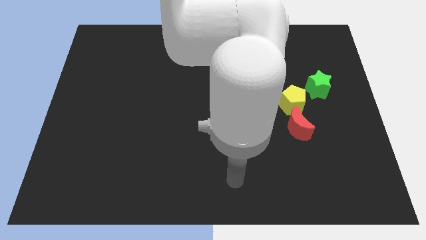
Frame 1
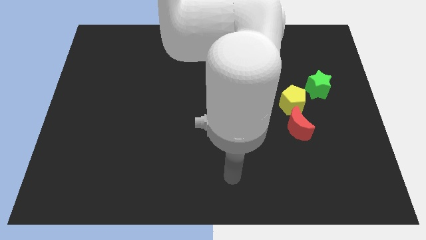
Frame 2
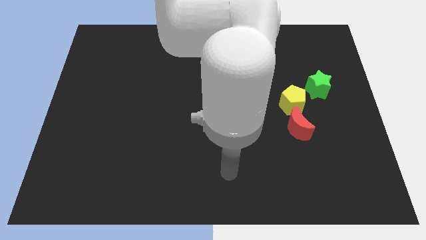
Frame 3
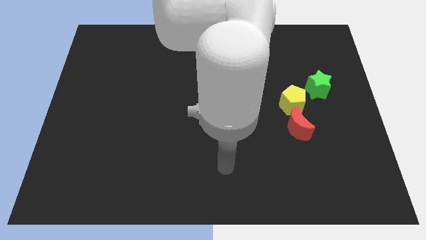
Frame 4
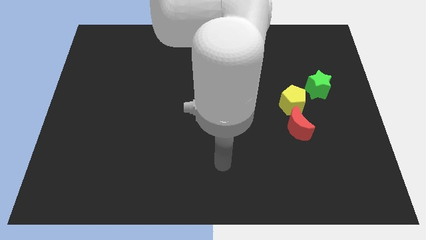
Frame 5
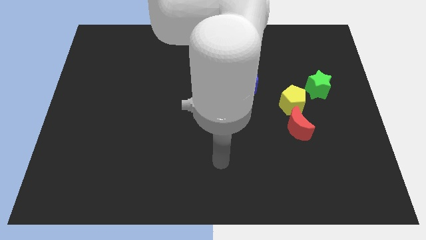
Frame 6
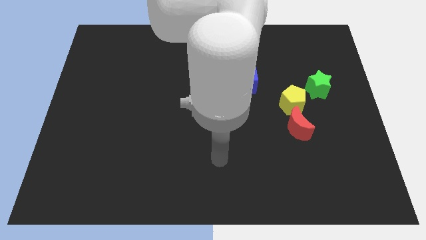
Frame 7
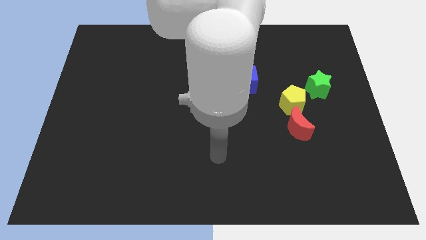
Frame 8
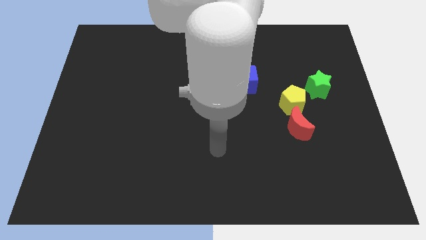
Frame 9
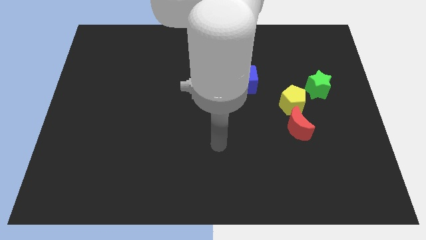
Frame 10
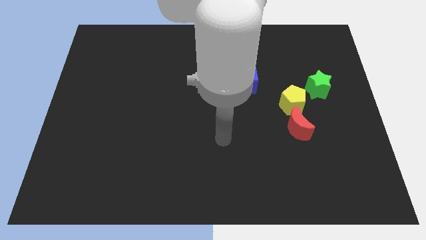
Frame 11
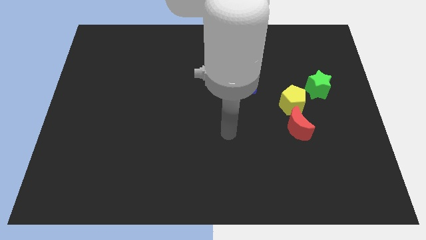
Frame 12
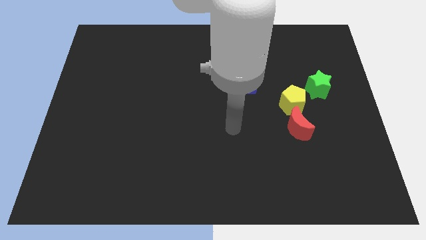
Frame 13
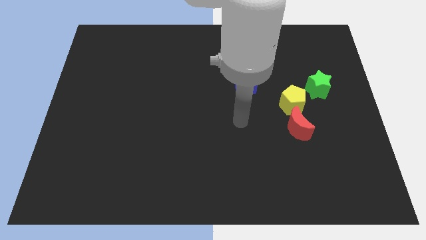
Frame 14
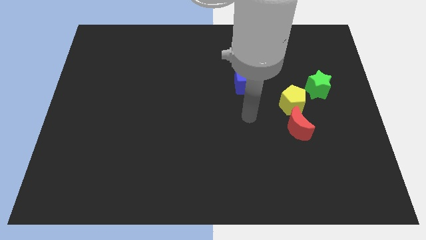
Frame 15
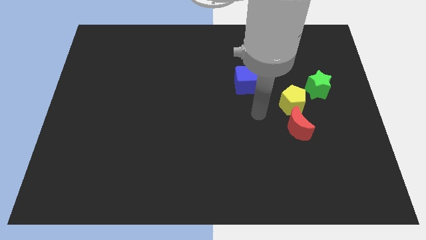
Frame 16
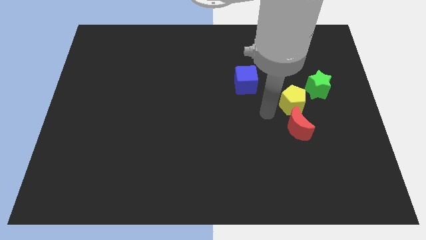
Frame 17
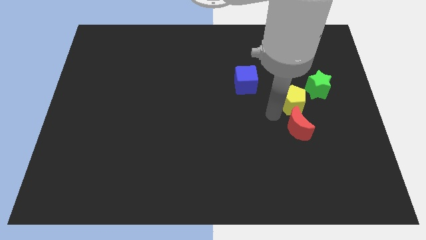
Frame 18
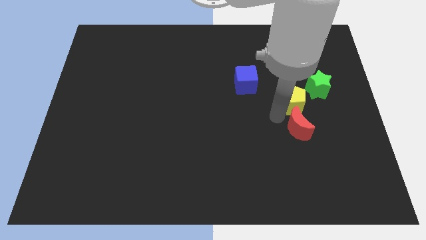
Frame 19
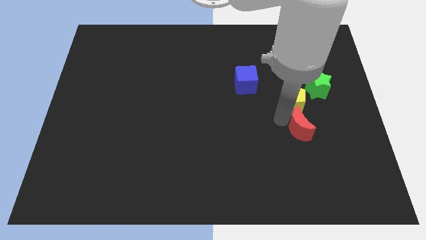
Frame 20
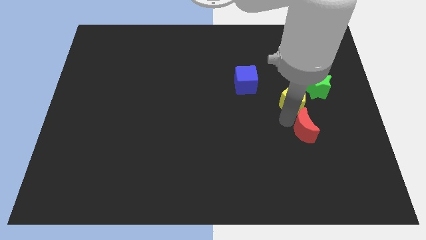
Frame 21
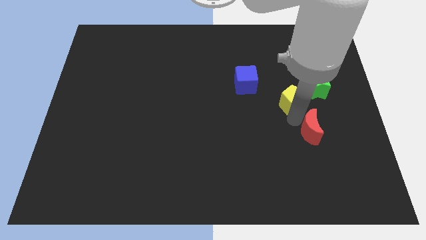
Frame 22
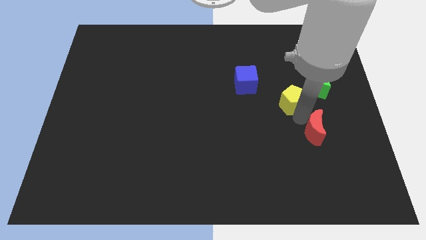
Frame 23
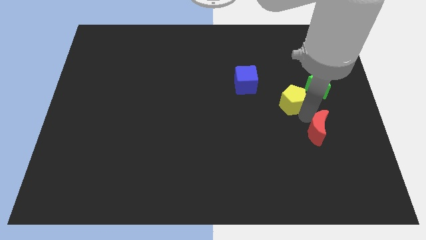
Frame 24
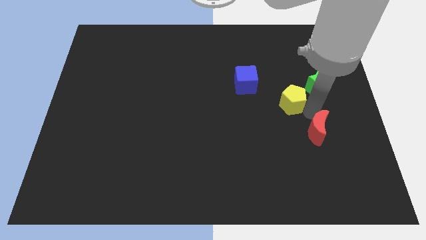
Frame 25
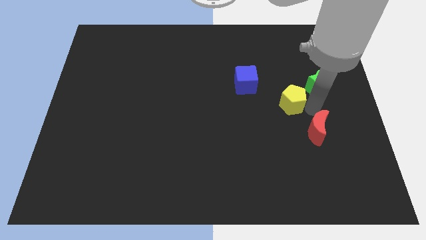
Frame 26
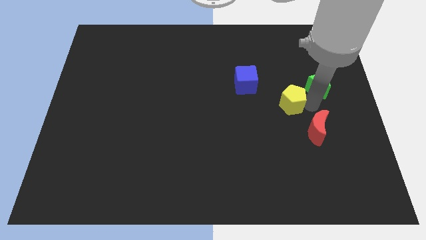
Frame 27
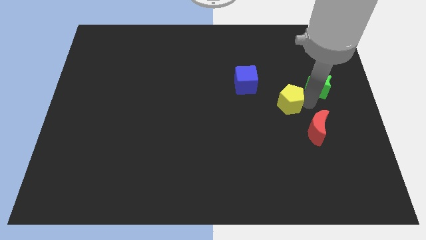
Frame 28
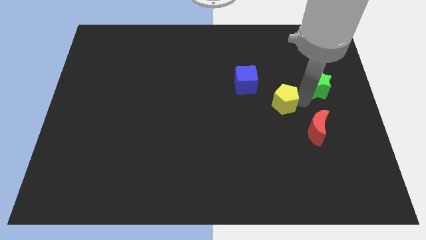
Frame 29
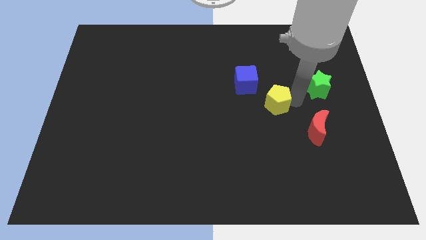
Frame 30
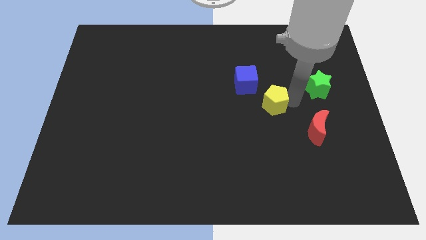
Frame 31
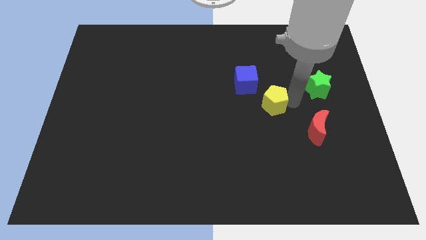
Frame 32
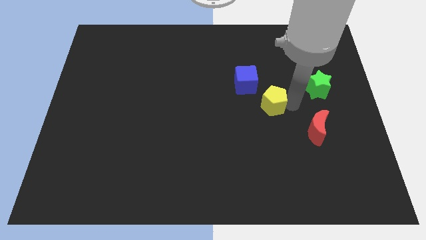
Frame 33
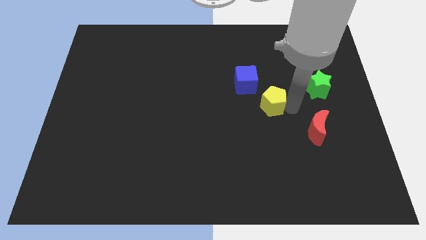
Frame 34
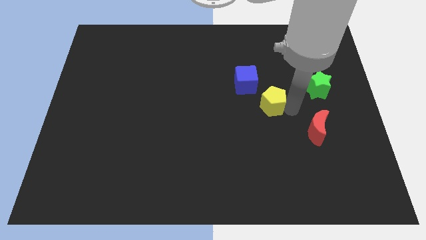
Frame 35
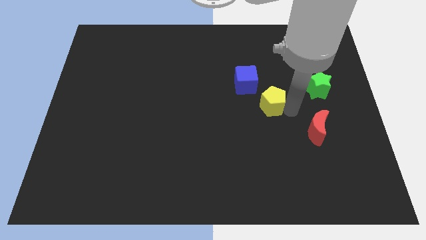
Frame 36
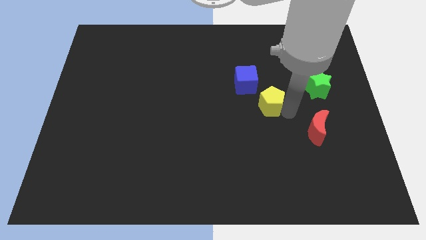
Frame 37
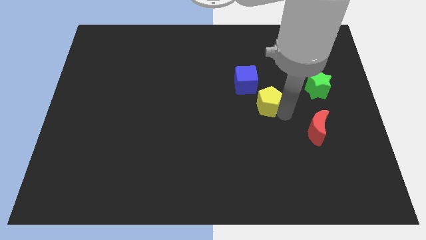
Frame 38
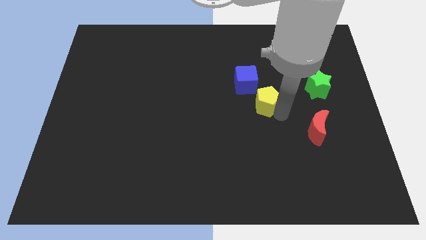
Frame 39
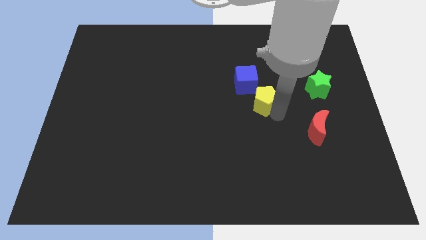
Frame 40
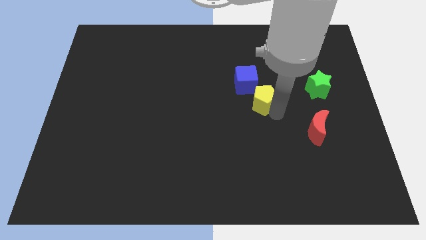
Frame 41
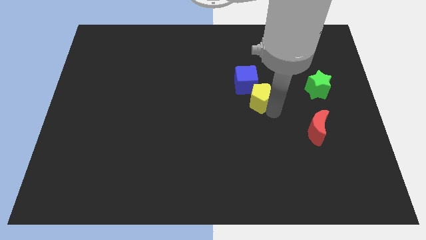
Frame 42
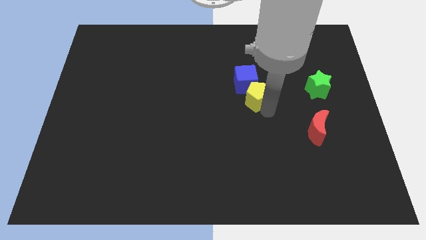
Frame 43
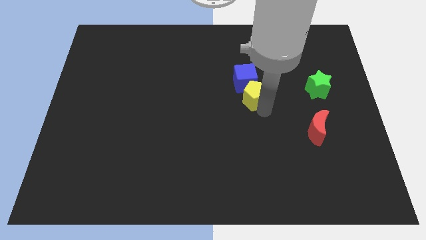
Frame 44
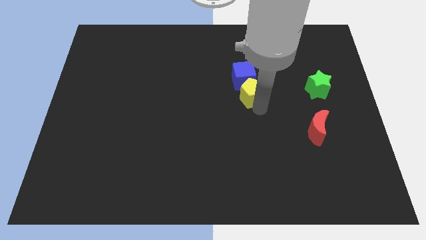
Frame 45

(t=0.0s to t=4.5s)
put the yellow pentagon close to the blue cube

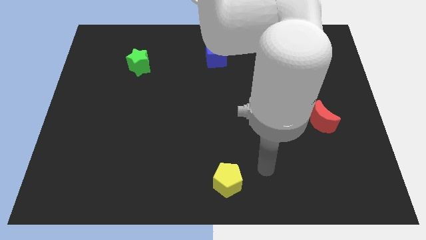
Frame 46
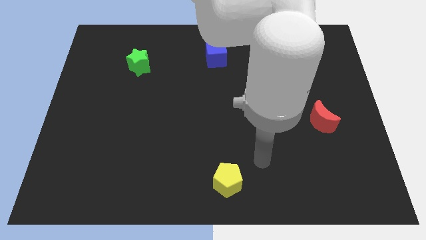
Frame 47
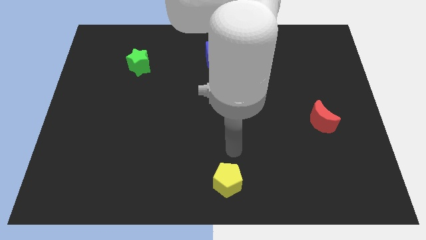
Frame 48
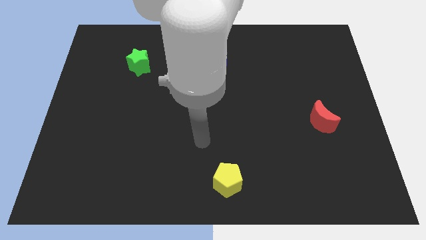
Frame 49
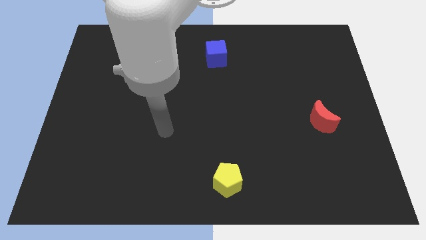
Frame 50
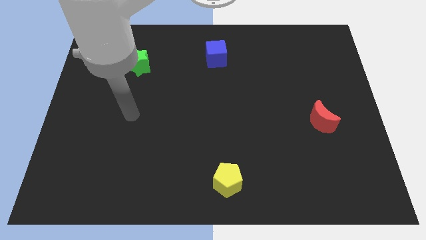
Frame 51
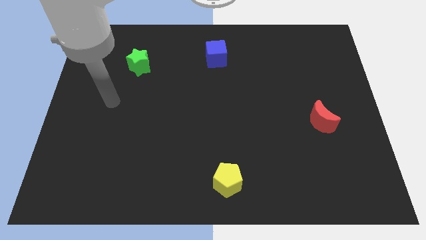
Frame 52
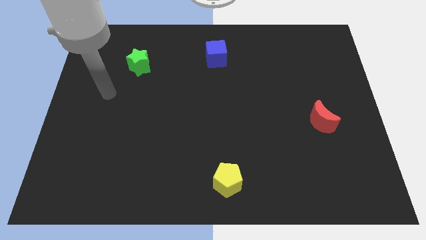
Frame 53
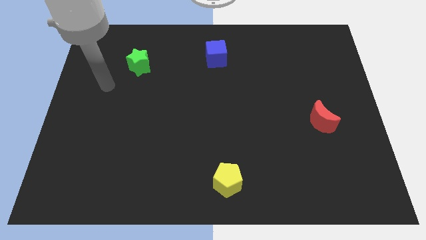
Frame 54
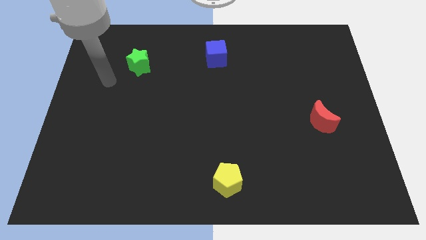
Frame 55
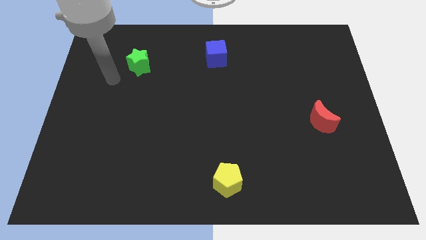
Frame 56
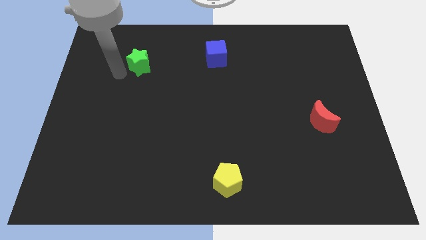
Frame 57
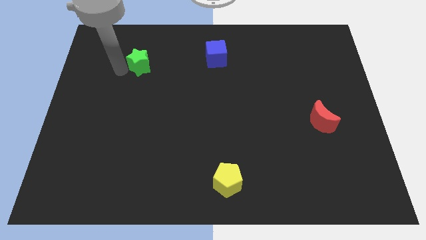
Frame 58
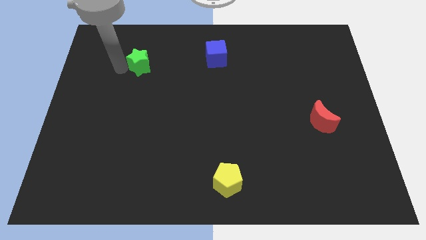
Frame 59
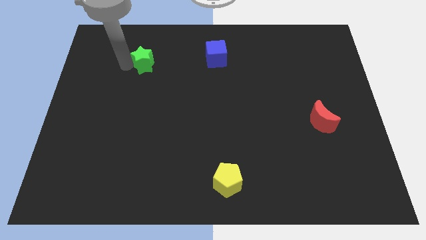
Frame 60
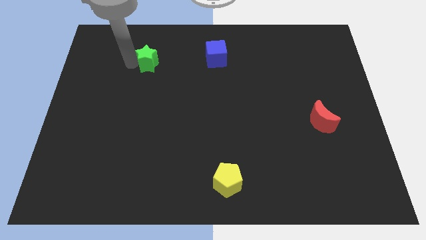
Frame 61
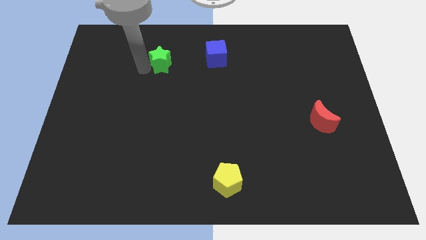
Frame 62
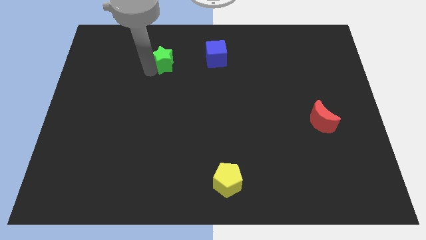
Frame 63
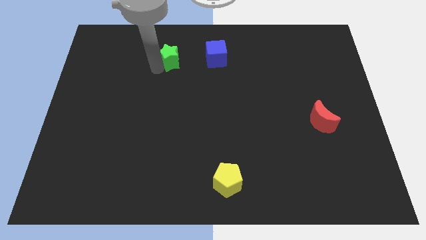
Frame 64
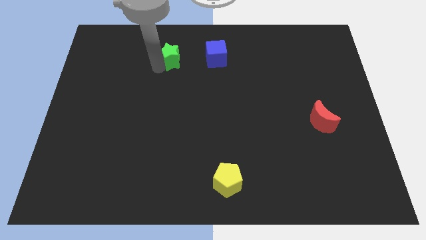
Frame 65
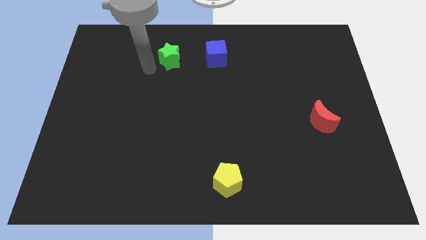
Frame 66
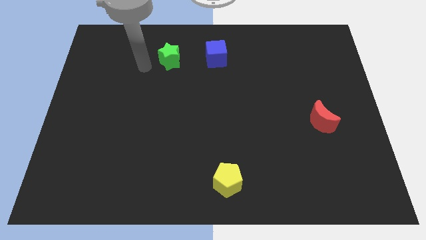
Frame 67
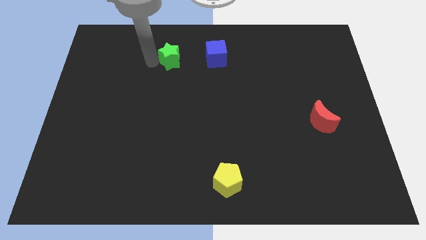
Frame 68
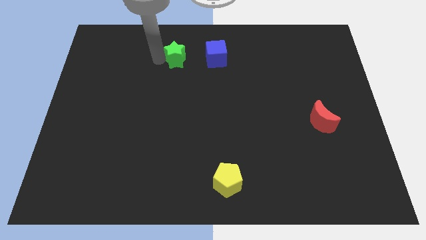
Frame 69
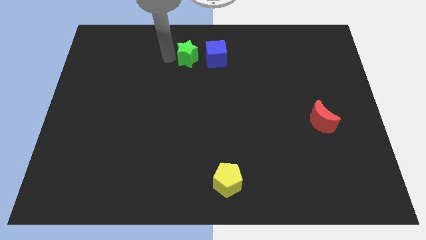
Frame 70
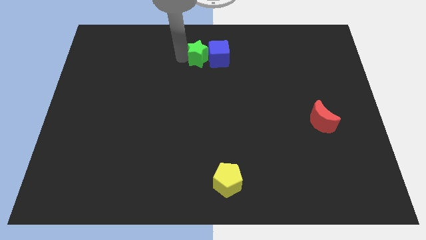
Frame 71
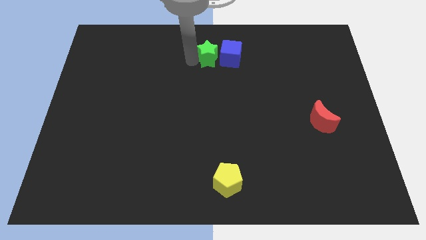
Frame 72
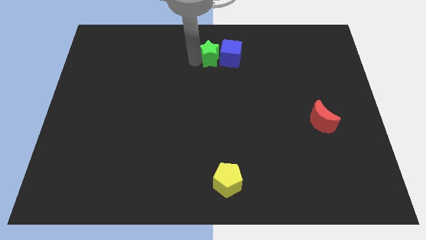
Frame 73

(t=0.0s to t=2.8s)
slide the green star next to the blue cube

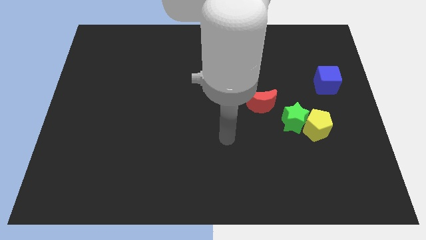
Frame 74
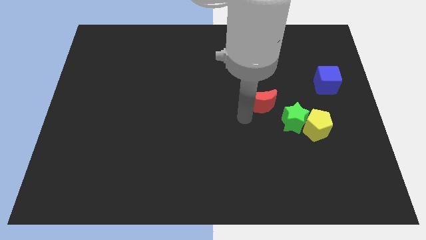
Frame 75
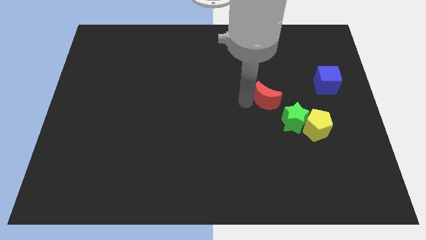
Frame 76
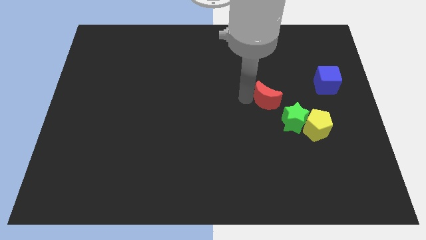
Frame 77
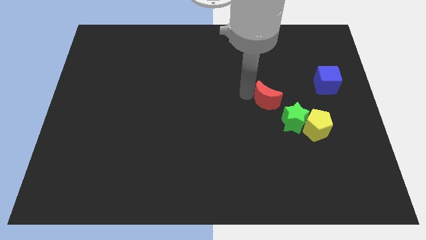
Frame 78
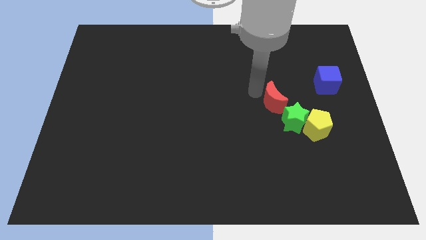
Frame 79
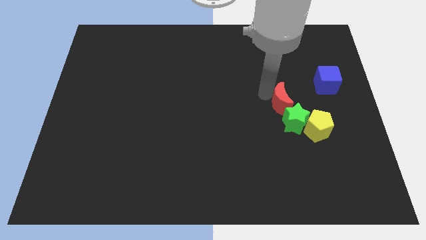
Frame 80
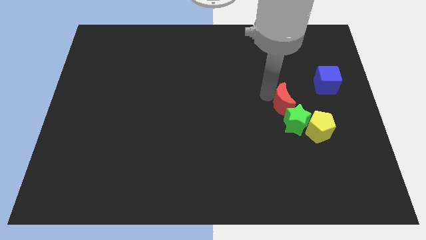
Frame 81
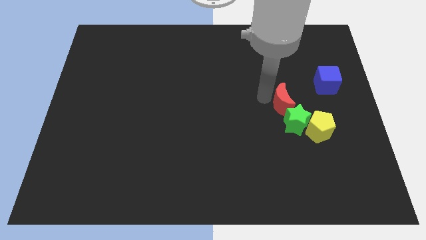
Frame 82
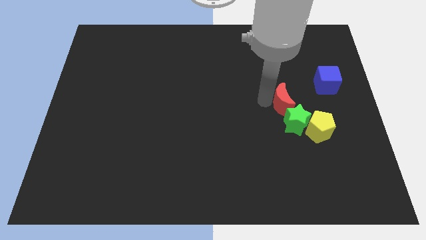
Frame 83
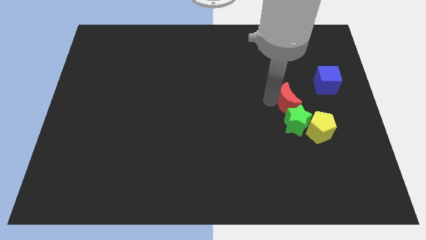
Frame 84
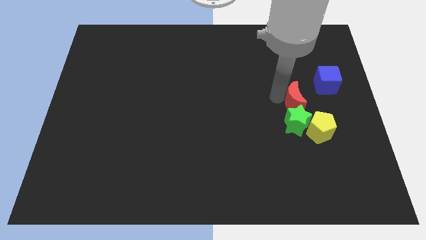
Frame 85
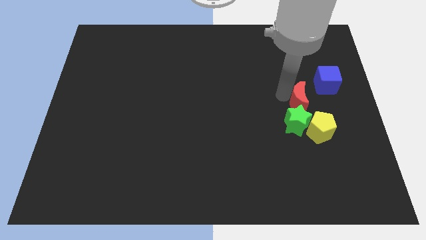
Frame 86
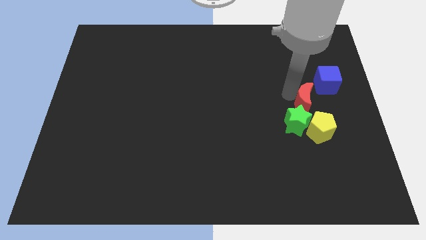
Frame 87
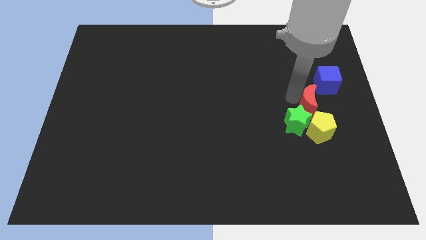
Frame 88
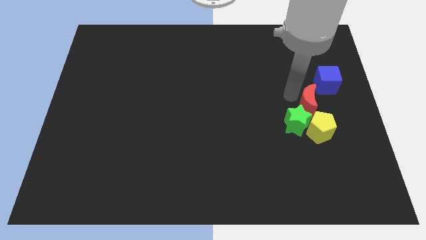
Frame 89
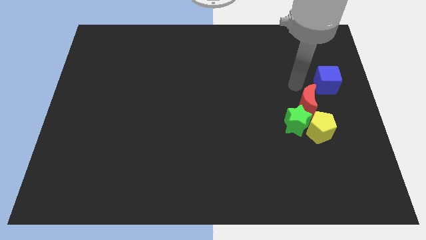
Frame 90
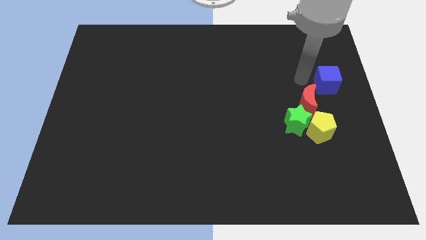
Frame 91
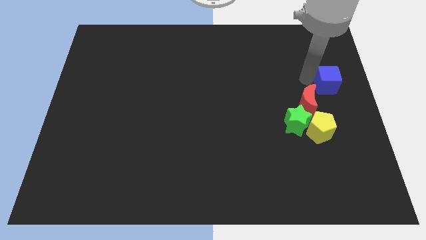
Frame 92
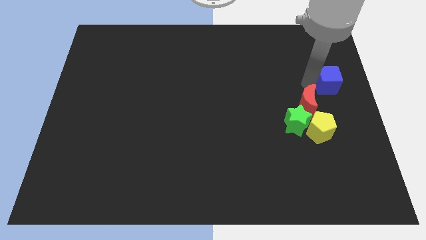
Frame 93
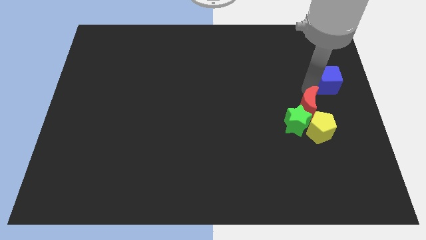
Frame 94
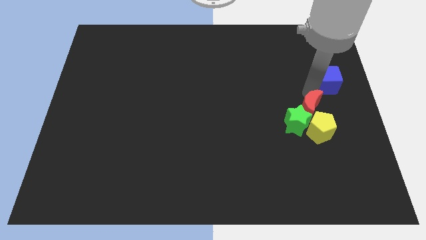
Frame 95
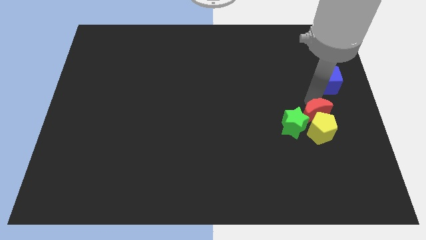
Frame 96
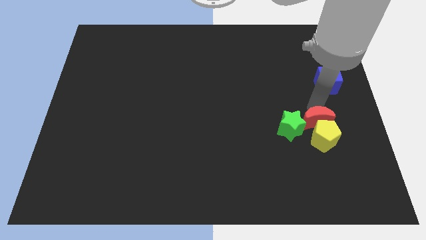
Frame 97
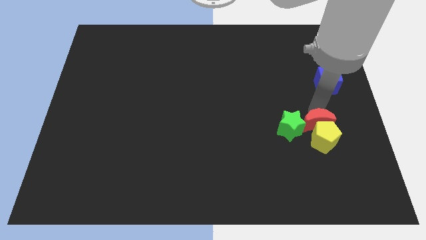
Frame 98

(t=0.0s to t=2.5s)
push the red block close to the yellow pentagon
